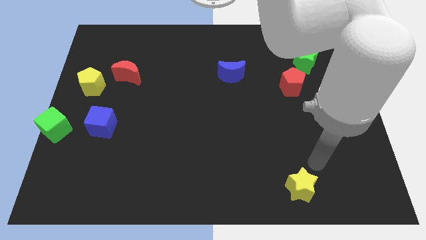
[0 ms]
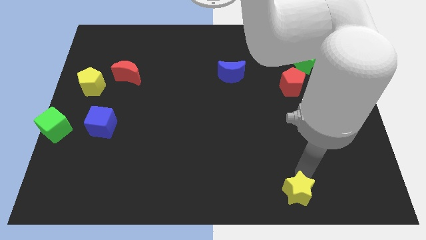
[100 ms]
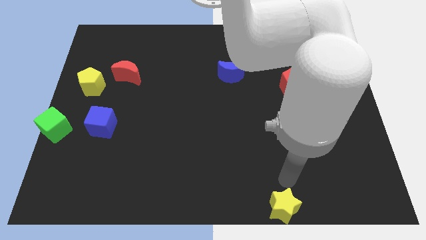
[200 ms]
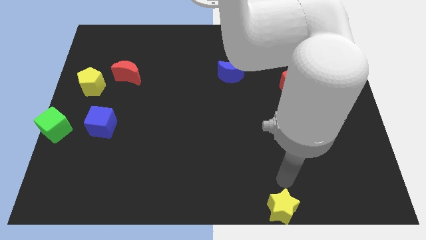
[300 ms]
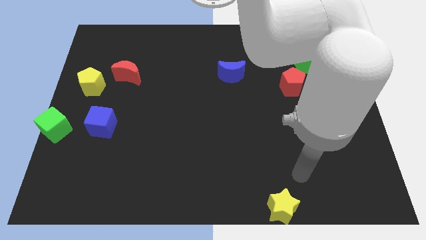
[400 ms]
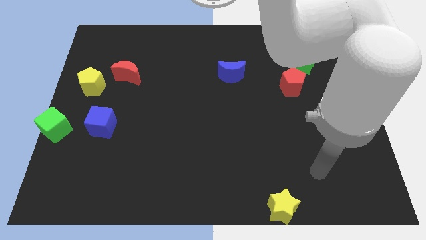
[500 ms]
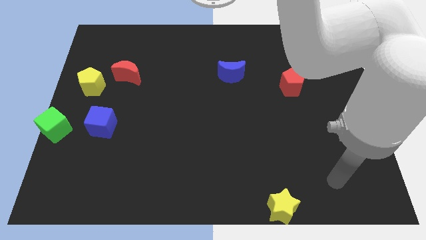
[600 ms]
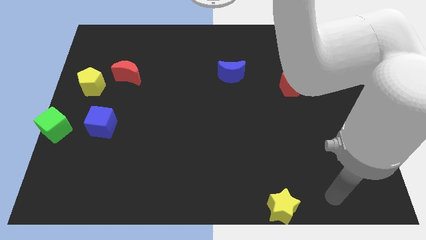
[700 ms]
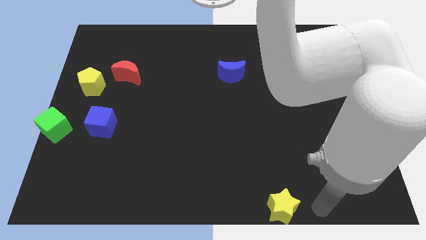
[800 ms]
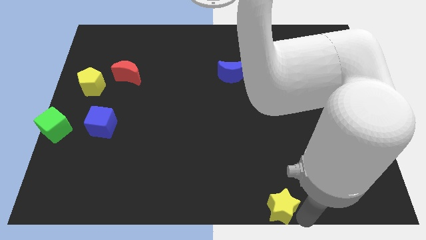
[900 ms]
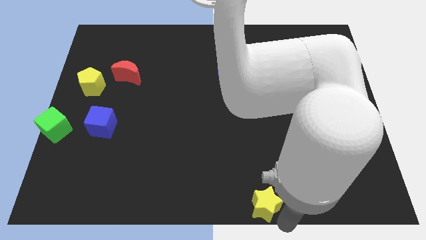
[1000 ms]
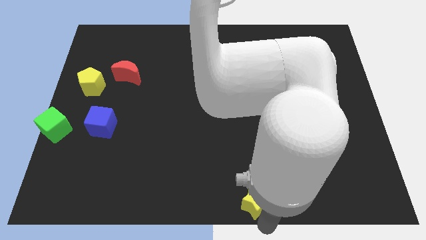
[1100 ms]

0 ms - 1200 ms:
push the green star to the bottom center of the board

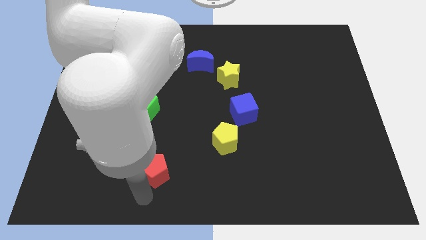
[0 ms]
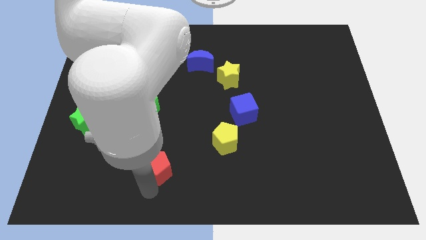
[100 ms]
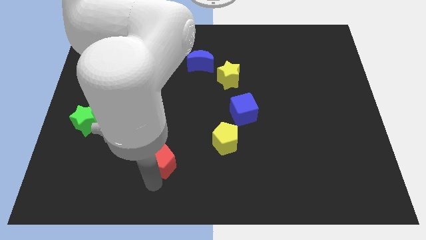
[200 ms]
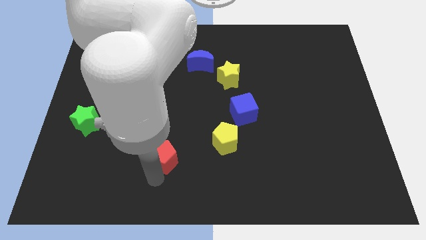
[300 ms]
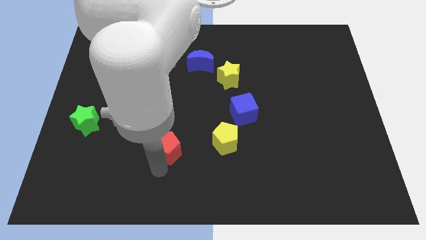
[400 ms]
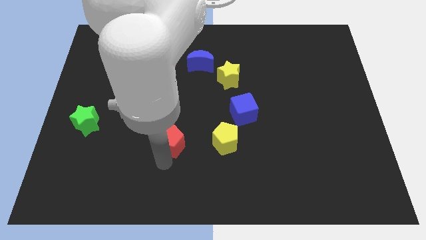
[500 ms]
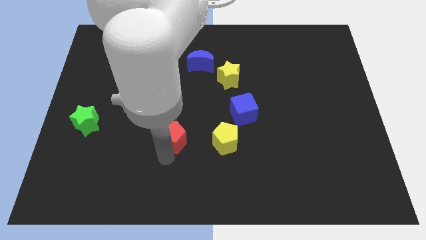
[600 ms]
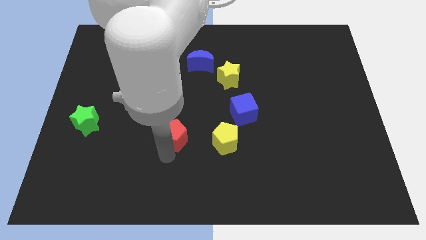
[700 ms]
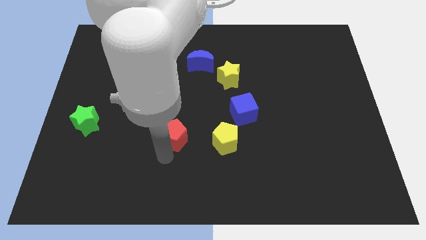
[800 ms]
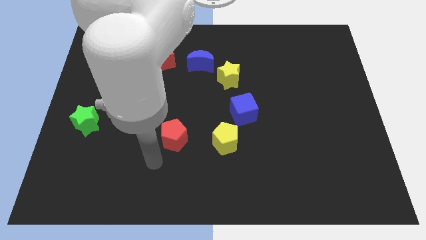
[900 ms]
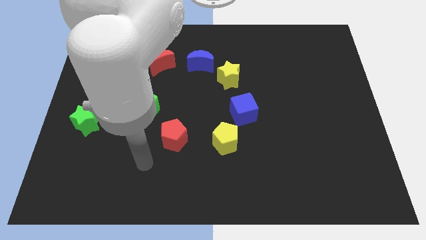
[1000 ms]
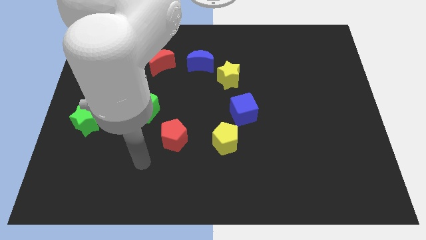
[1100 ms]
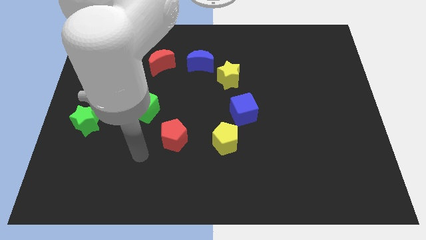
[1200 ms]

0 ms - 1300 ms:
place the red pentagon diagonally bottom right to the green cube

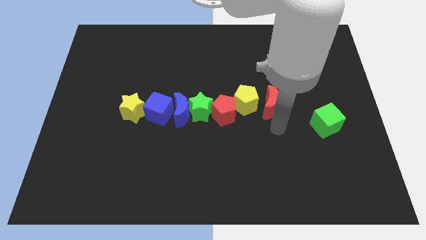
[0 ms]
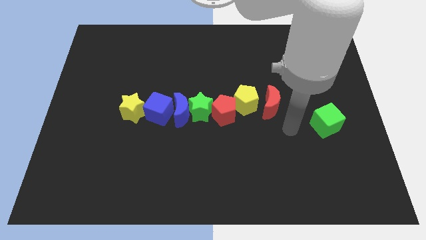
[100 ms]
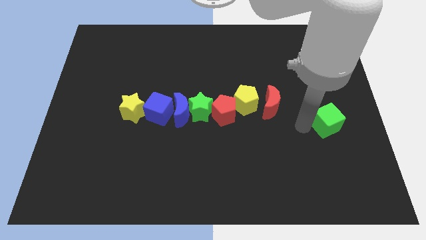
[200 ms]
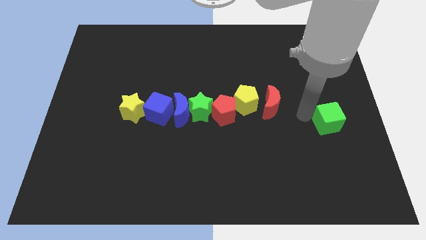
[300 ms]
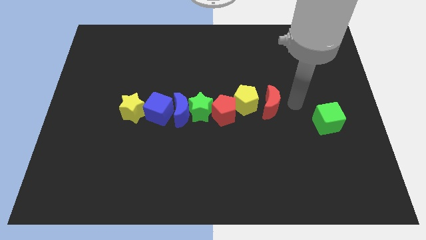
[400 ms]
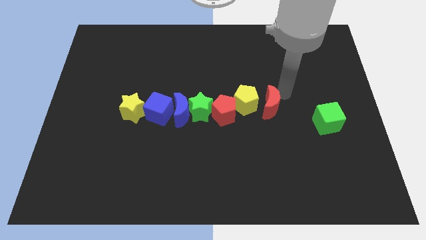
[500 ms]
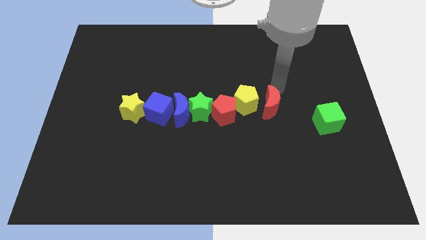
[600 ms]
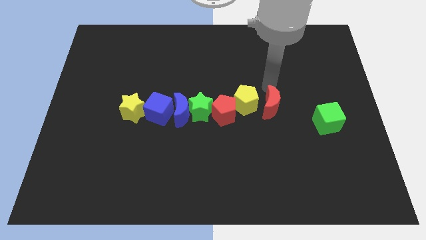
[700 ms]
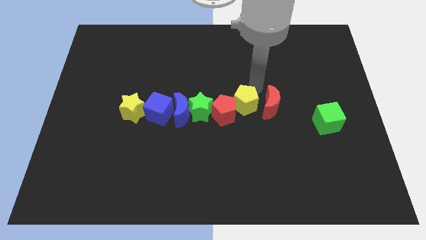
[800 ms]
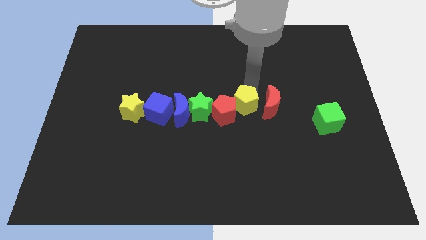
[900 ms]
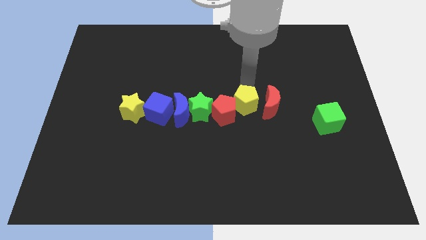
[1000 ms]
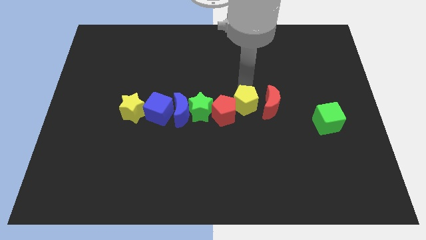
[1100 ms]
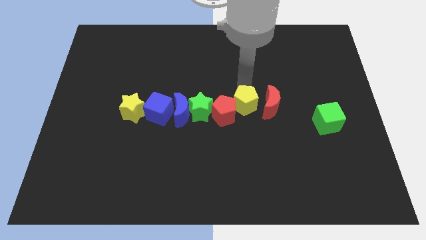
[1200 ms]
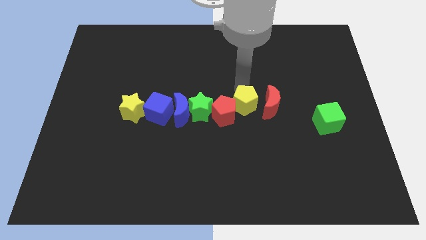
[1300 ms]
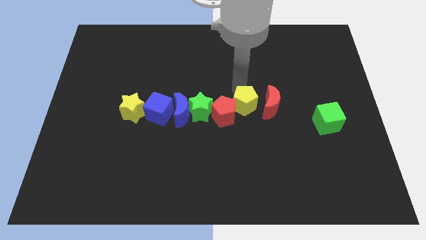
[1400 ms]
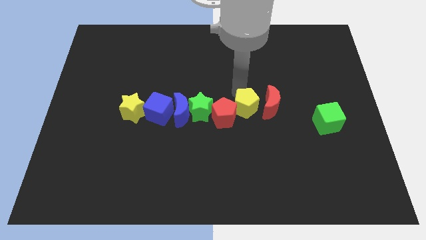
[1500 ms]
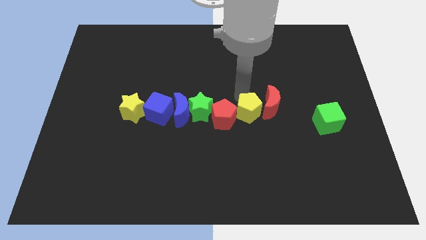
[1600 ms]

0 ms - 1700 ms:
move your arm close to the yellow pentagon

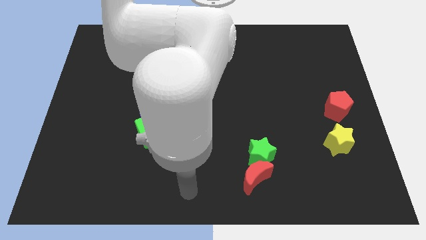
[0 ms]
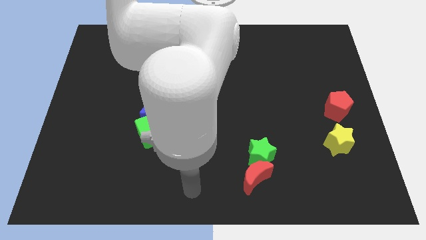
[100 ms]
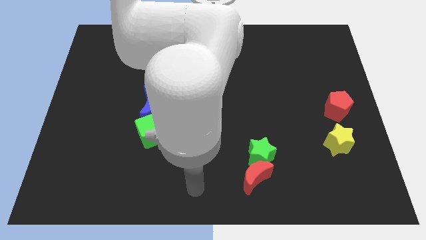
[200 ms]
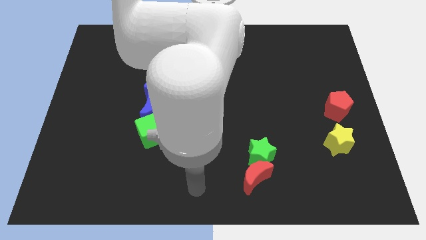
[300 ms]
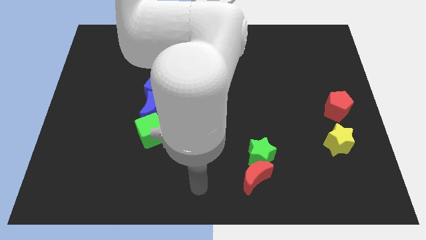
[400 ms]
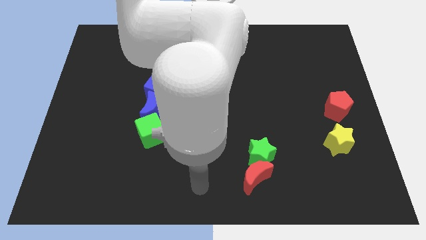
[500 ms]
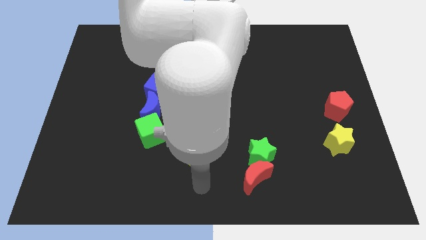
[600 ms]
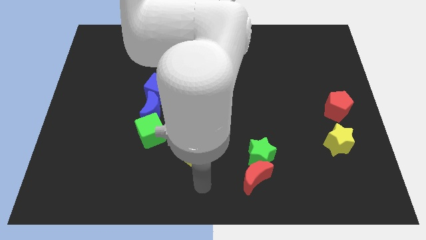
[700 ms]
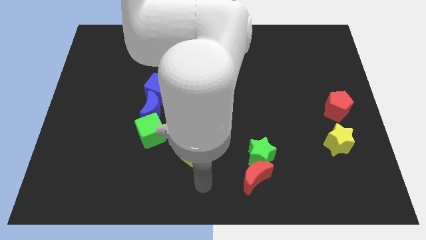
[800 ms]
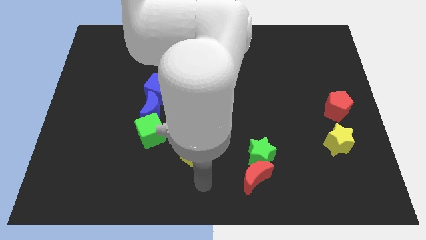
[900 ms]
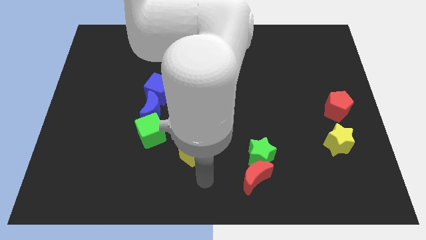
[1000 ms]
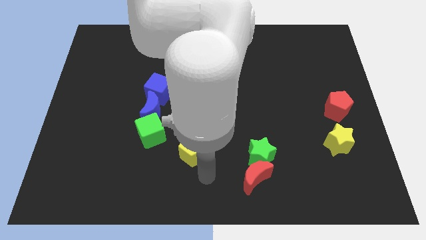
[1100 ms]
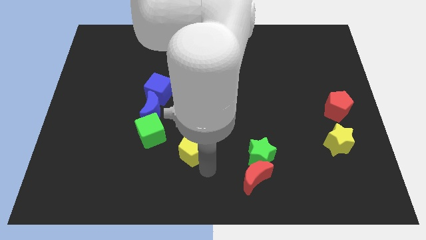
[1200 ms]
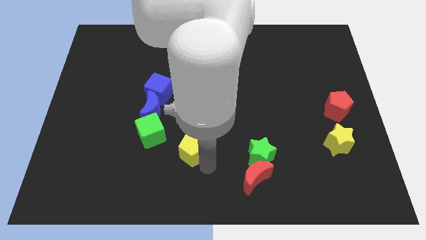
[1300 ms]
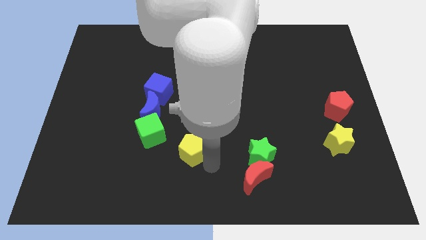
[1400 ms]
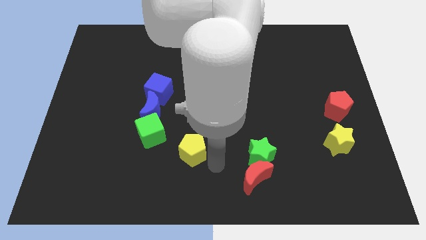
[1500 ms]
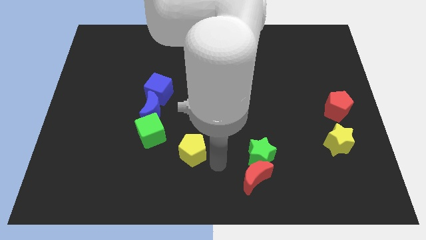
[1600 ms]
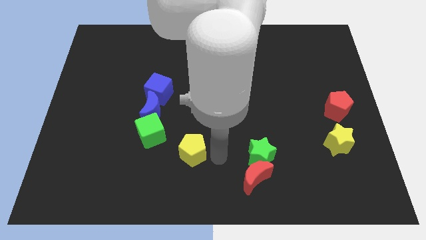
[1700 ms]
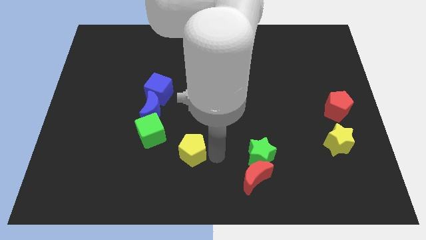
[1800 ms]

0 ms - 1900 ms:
point your arm in between the yellow pentagon and green star

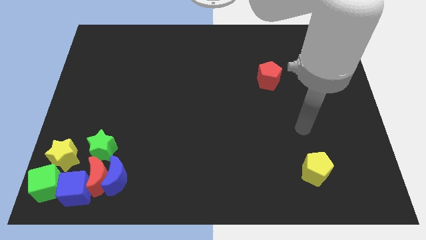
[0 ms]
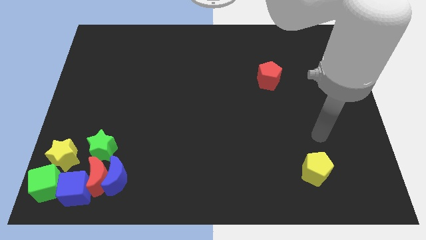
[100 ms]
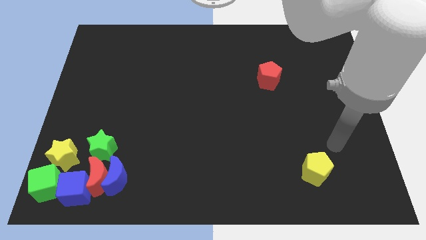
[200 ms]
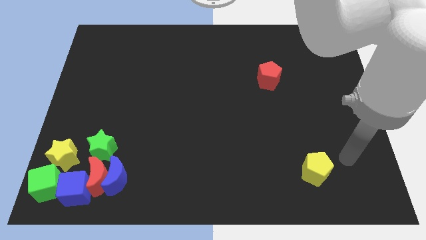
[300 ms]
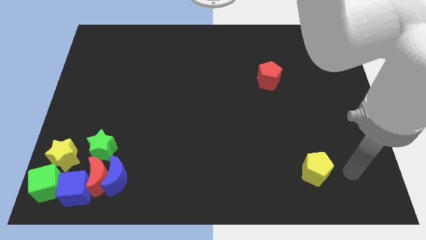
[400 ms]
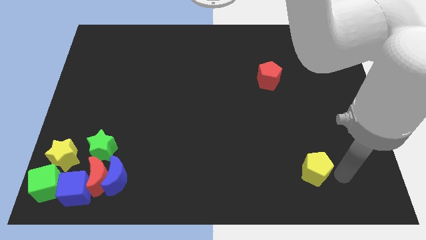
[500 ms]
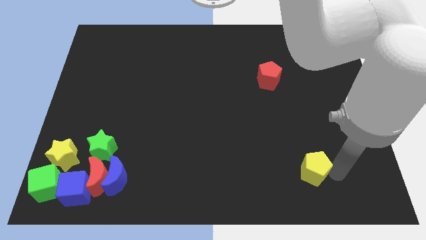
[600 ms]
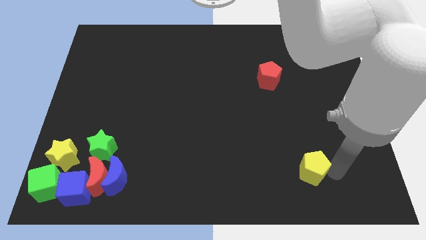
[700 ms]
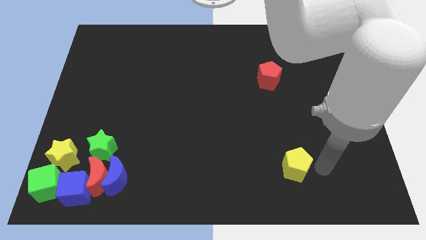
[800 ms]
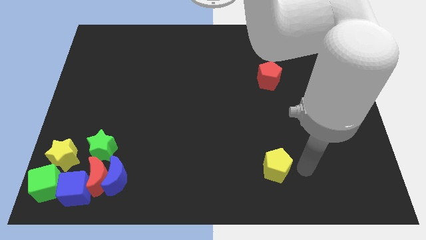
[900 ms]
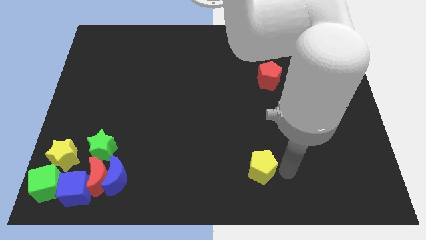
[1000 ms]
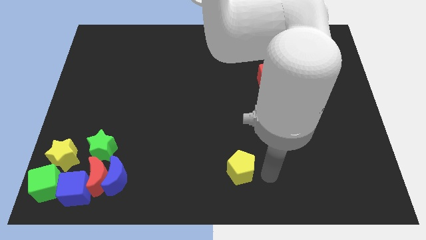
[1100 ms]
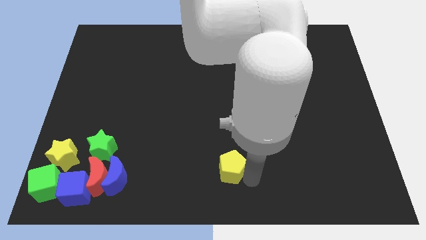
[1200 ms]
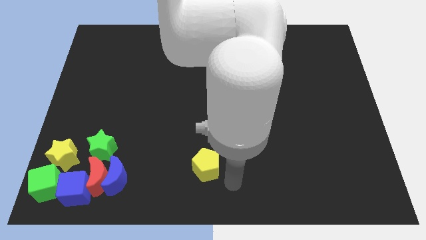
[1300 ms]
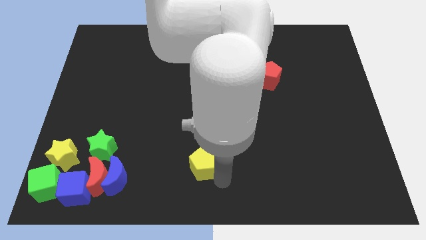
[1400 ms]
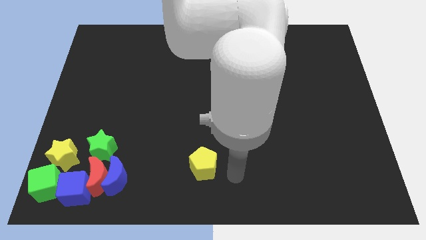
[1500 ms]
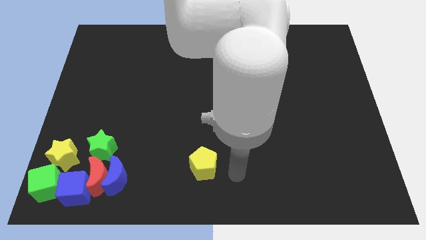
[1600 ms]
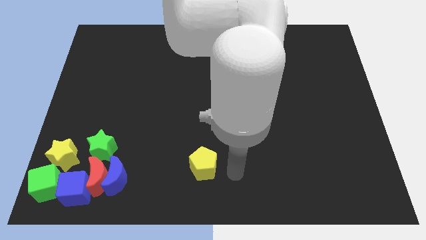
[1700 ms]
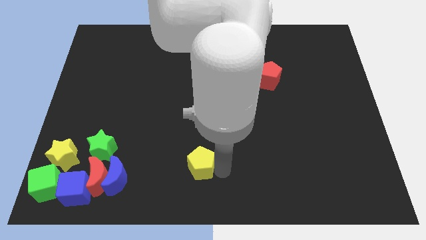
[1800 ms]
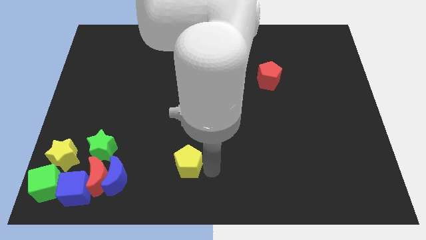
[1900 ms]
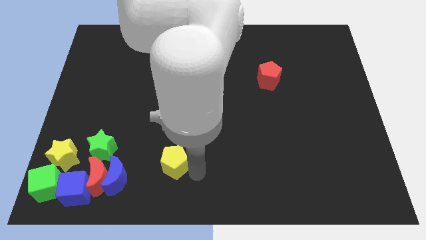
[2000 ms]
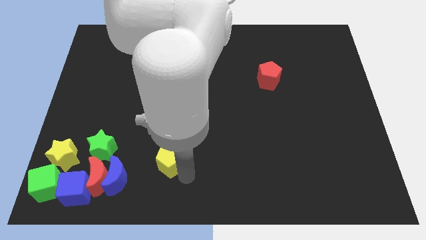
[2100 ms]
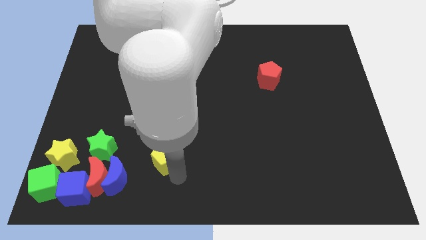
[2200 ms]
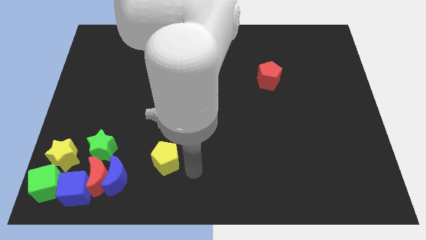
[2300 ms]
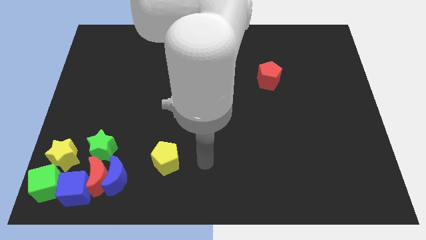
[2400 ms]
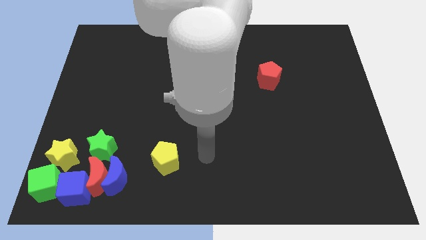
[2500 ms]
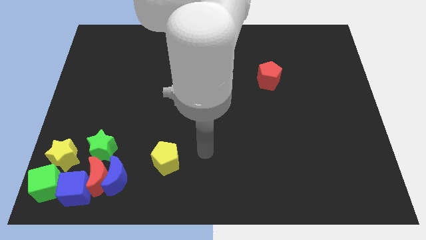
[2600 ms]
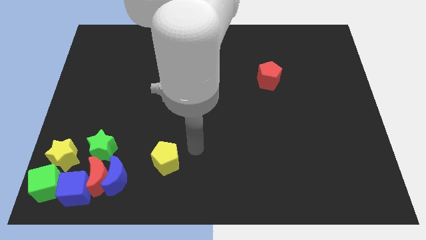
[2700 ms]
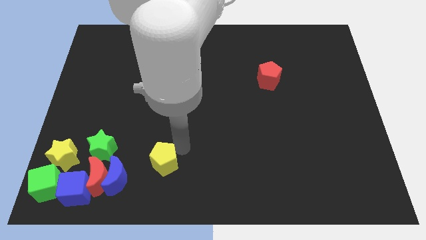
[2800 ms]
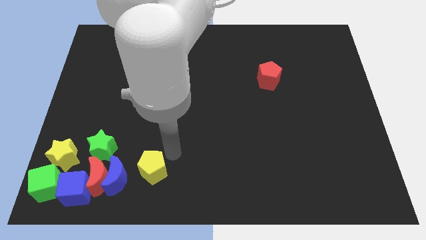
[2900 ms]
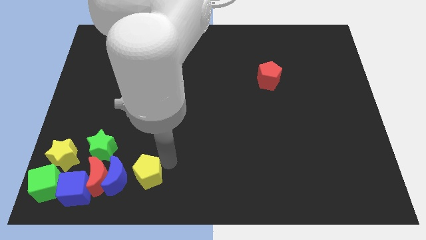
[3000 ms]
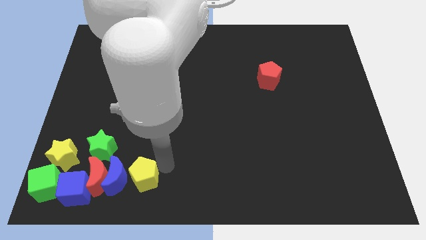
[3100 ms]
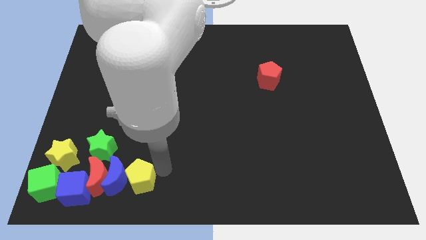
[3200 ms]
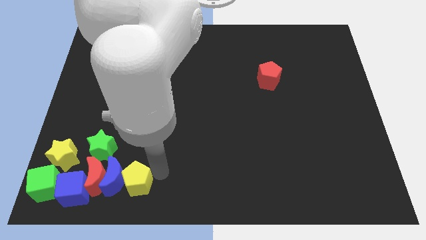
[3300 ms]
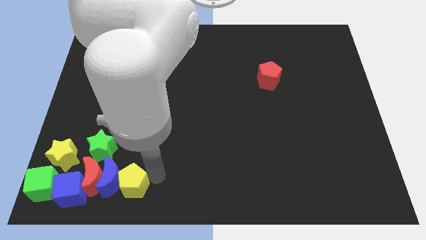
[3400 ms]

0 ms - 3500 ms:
place the yellow pentagon right to the blue moon
